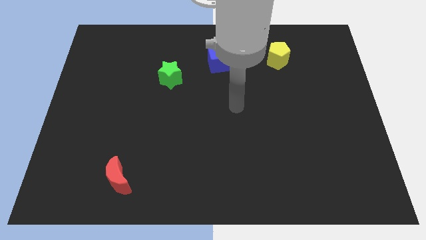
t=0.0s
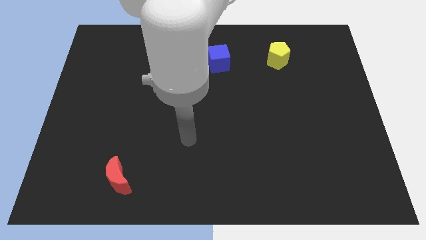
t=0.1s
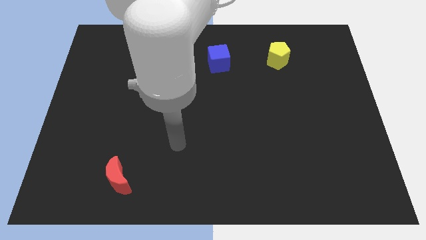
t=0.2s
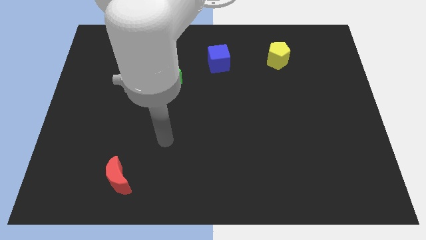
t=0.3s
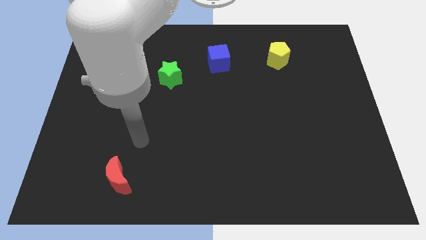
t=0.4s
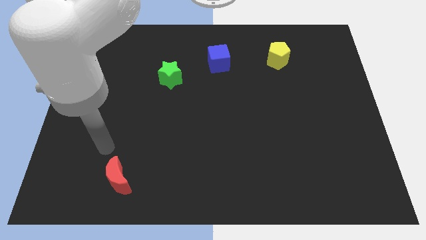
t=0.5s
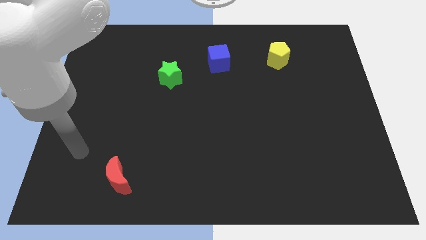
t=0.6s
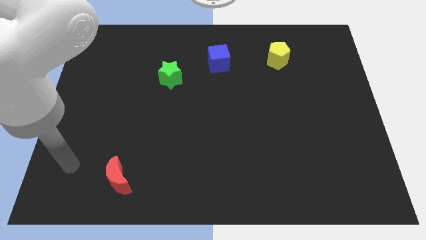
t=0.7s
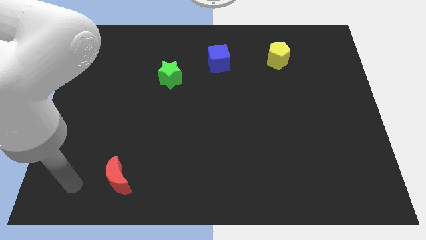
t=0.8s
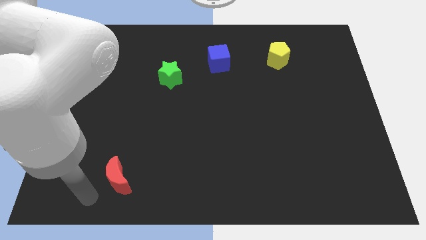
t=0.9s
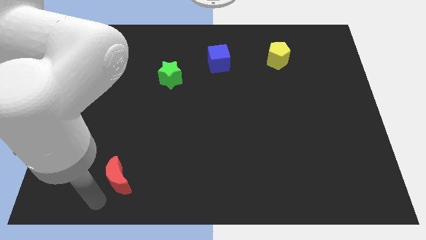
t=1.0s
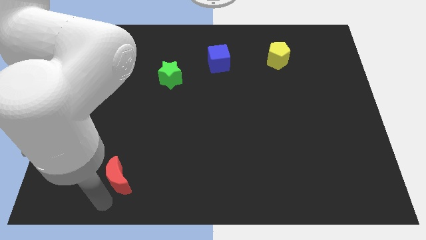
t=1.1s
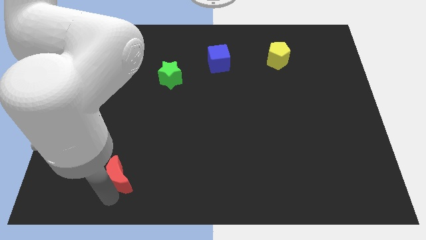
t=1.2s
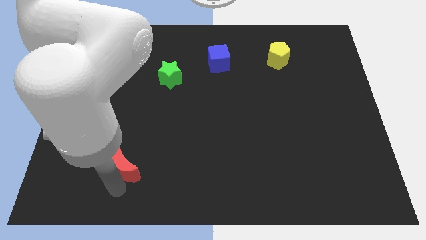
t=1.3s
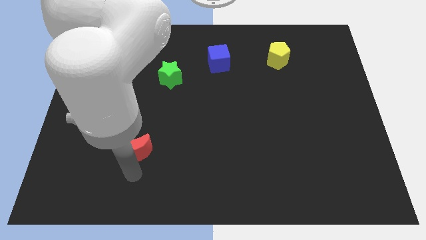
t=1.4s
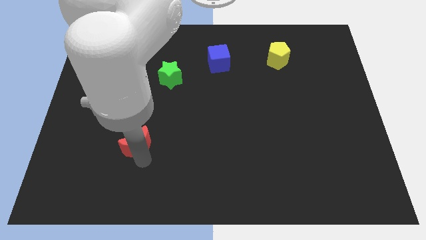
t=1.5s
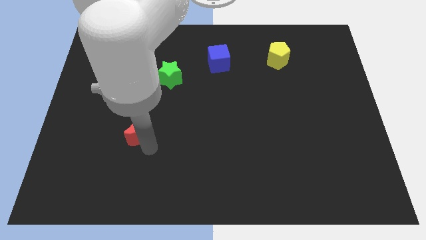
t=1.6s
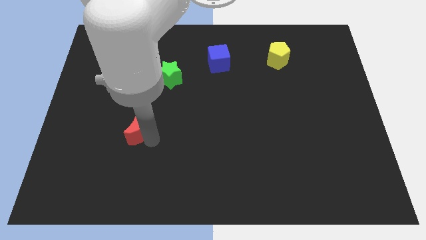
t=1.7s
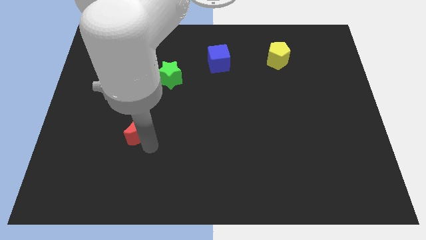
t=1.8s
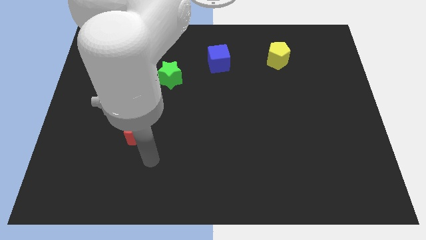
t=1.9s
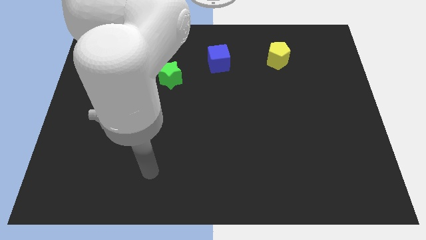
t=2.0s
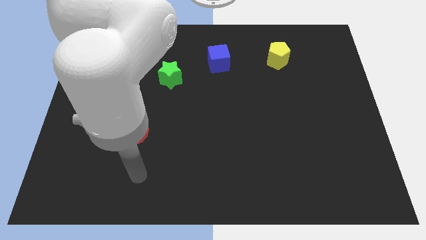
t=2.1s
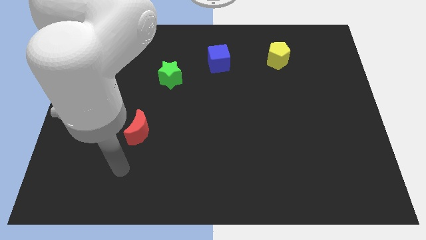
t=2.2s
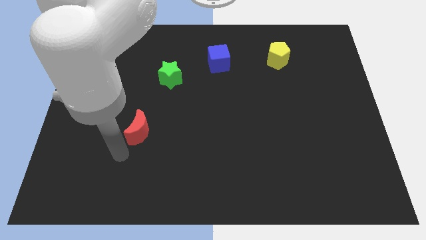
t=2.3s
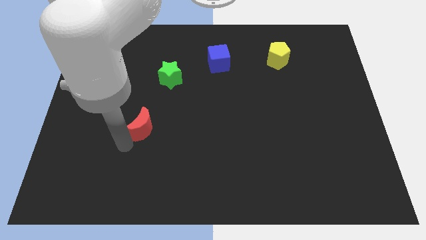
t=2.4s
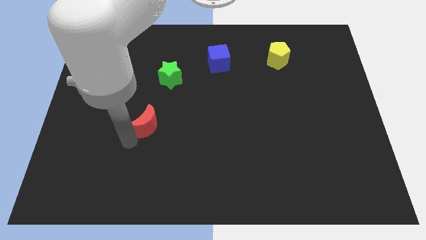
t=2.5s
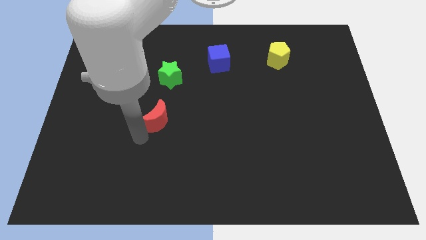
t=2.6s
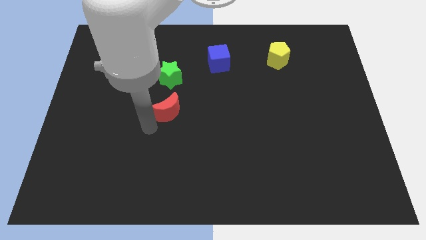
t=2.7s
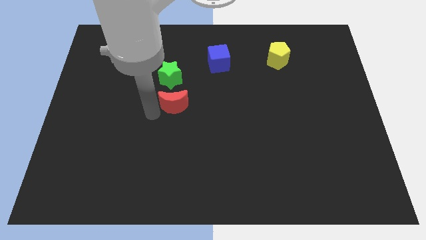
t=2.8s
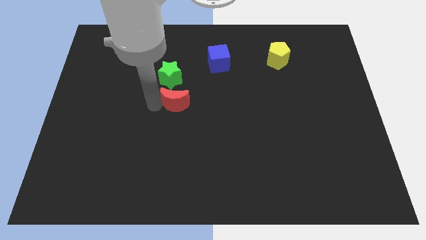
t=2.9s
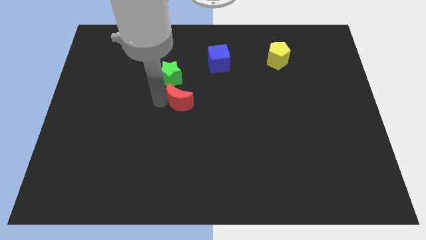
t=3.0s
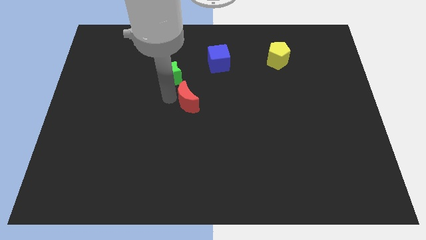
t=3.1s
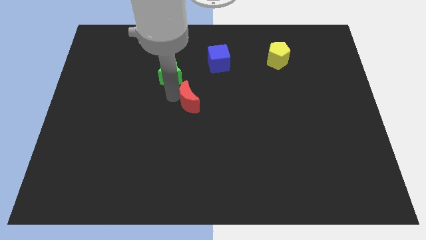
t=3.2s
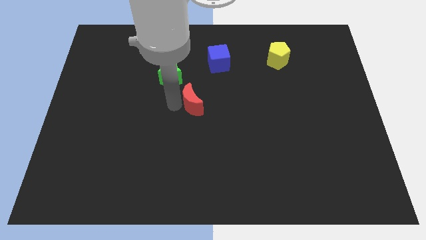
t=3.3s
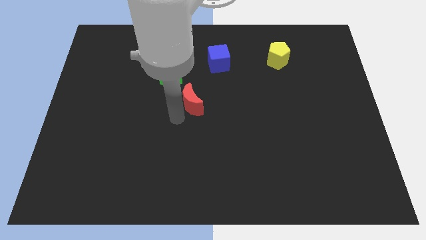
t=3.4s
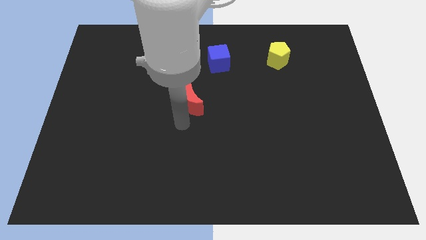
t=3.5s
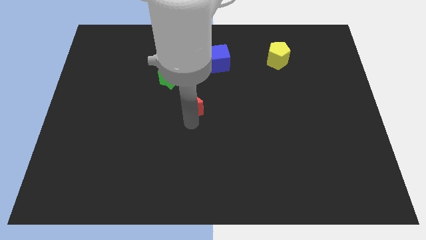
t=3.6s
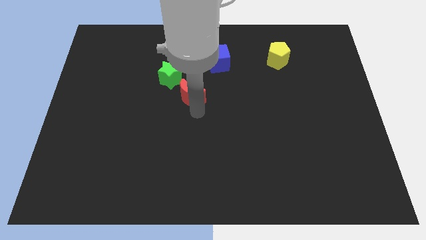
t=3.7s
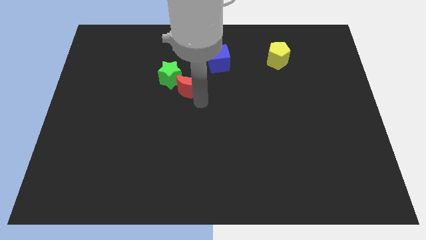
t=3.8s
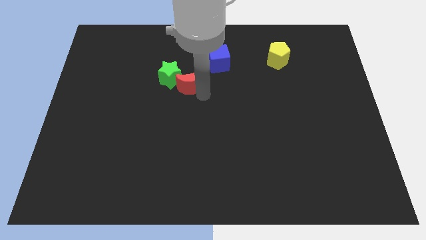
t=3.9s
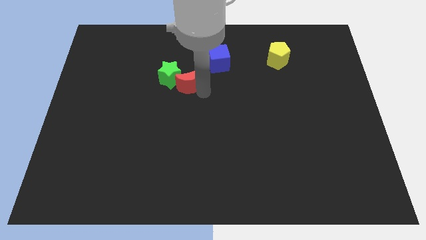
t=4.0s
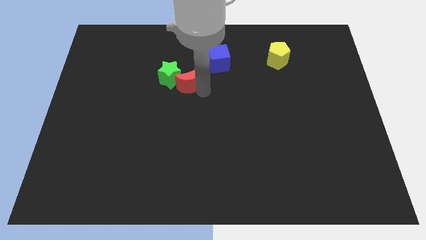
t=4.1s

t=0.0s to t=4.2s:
move the red block towards the star

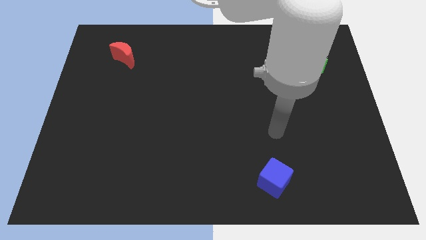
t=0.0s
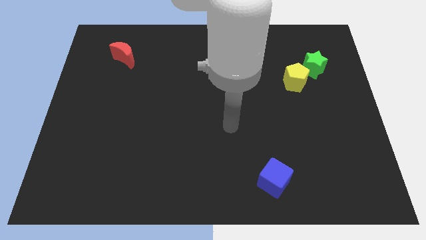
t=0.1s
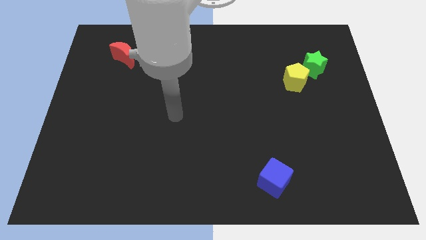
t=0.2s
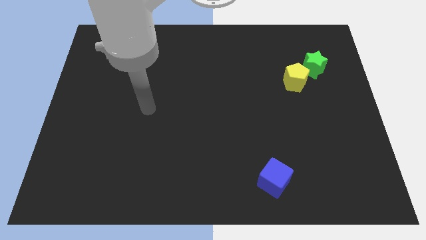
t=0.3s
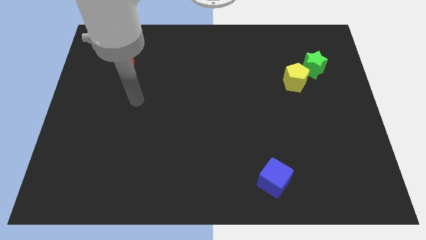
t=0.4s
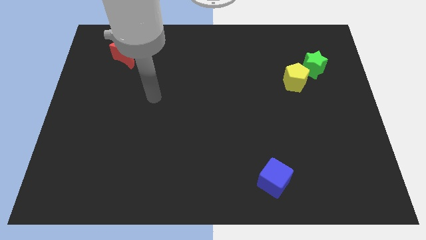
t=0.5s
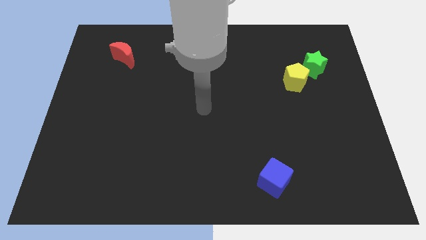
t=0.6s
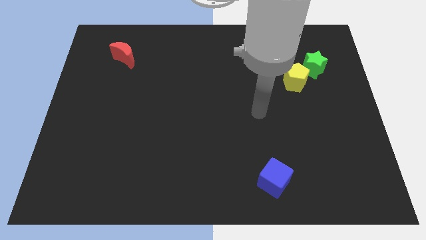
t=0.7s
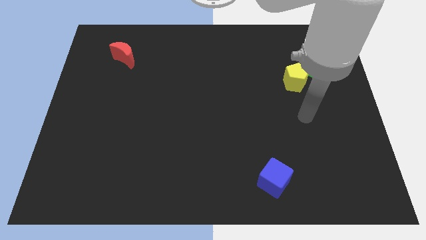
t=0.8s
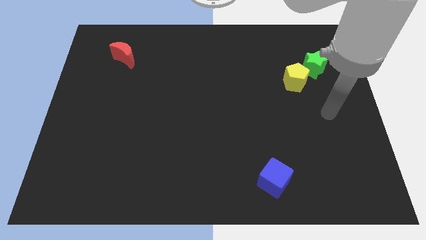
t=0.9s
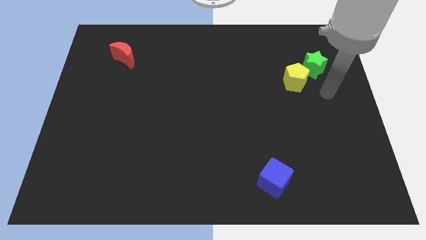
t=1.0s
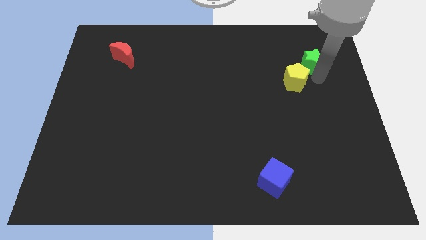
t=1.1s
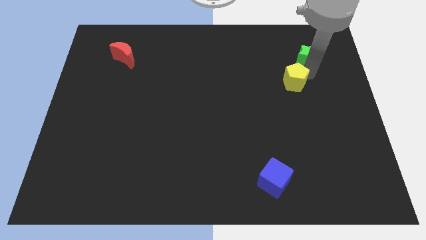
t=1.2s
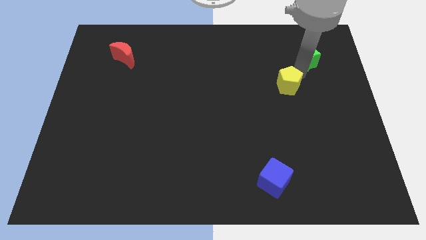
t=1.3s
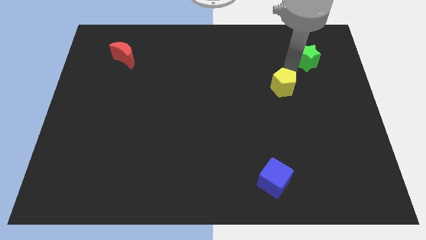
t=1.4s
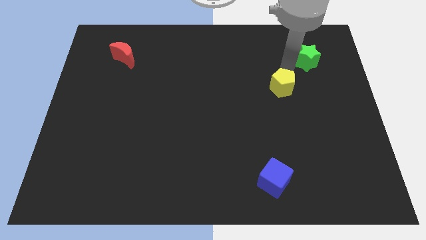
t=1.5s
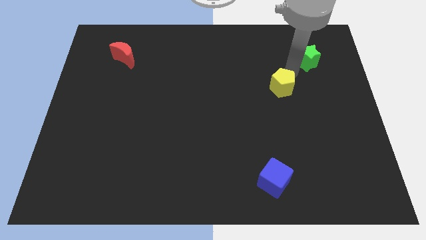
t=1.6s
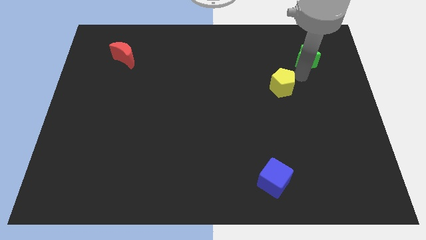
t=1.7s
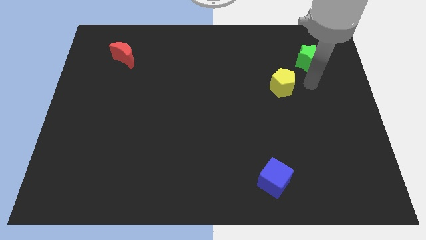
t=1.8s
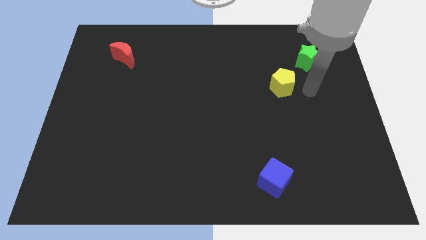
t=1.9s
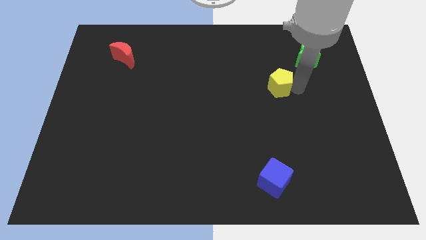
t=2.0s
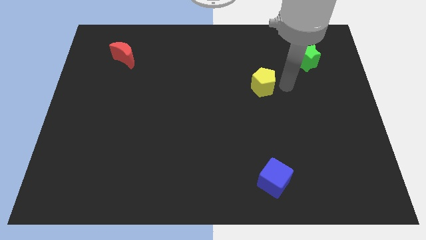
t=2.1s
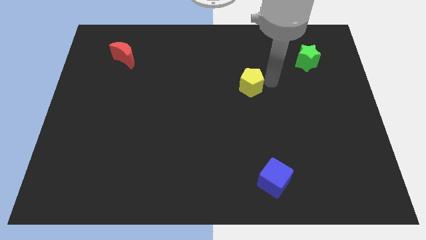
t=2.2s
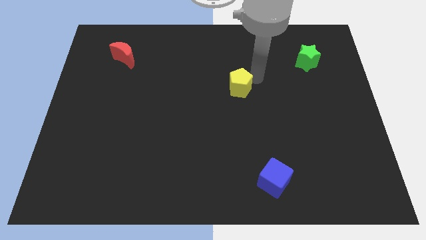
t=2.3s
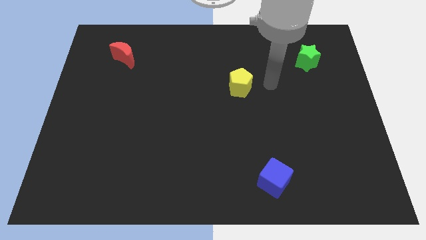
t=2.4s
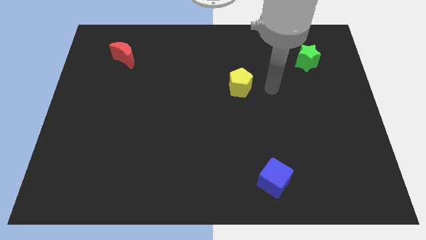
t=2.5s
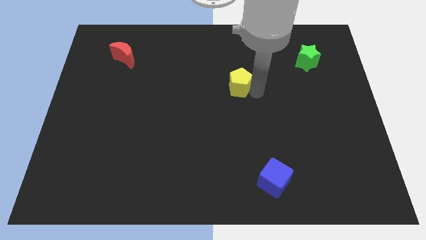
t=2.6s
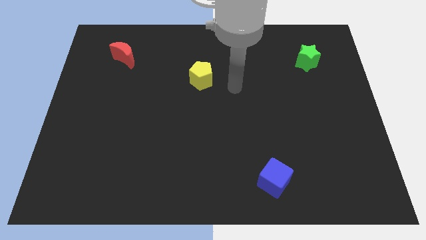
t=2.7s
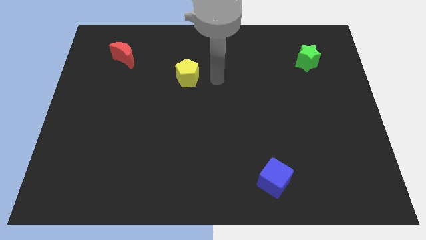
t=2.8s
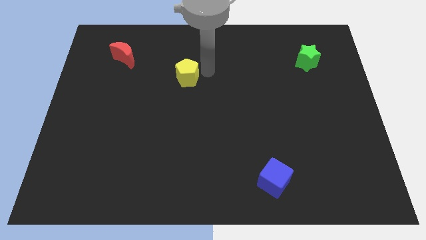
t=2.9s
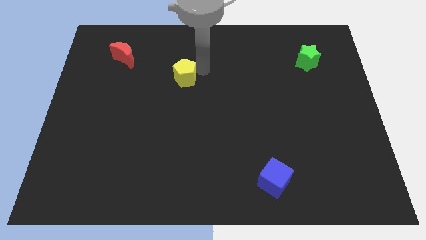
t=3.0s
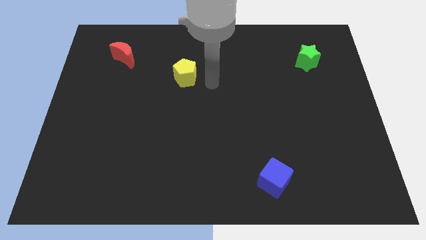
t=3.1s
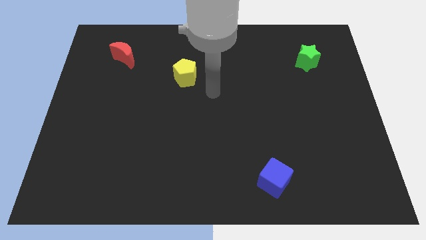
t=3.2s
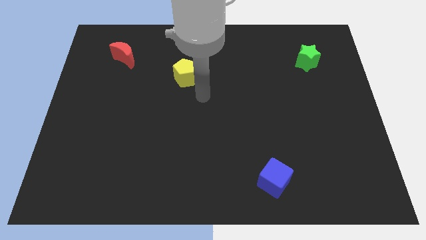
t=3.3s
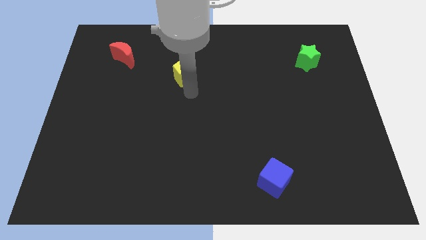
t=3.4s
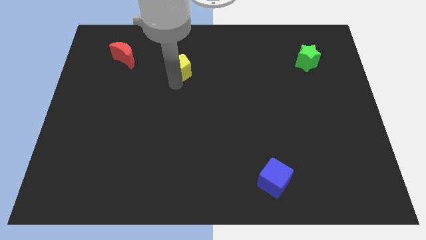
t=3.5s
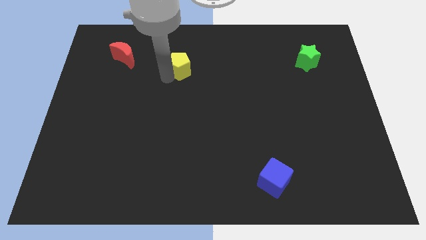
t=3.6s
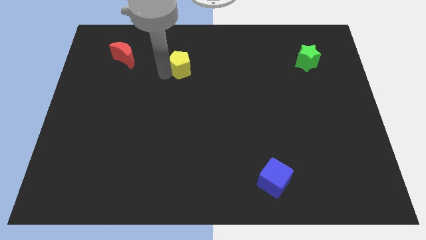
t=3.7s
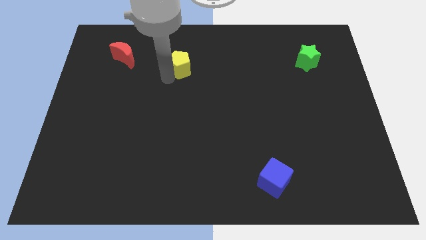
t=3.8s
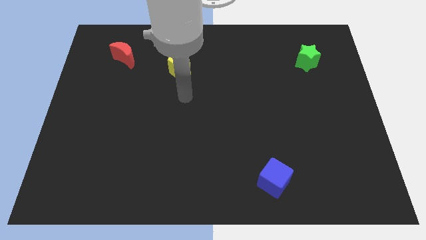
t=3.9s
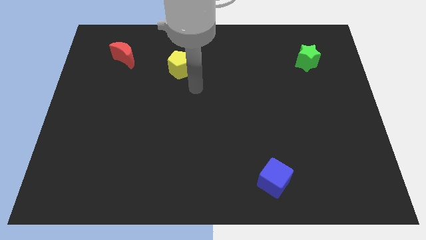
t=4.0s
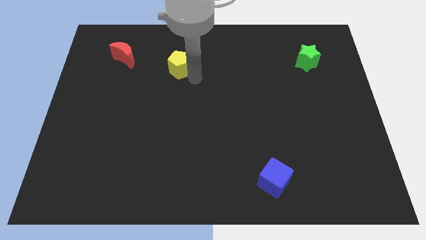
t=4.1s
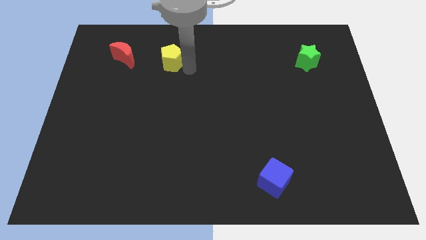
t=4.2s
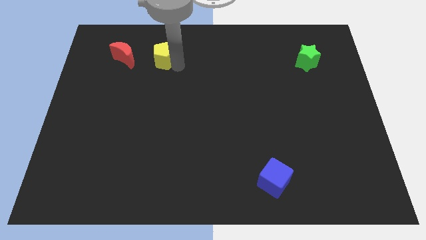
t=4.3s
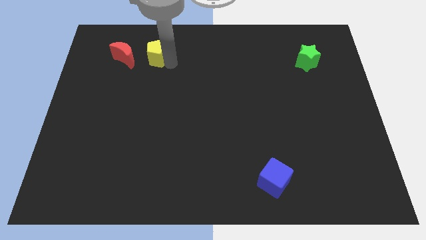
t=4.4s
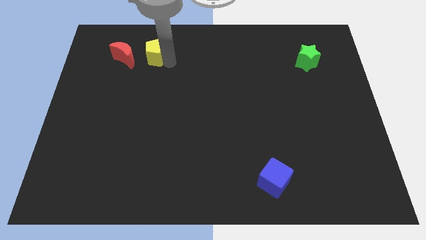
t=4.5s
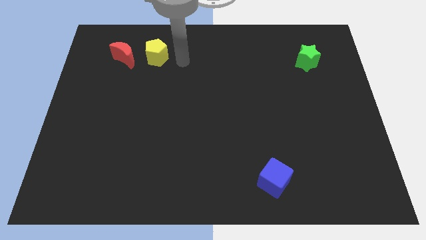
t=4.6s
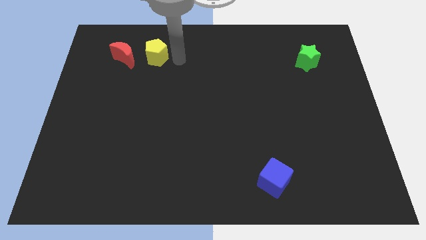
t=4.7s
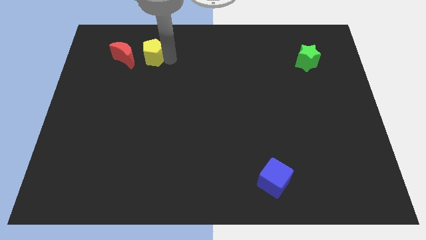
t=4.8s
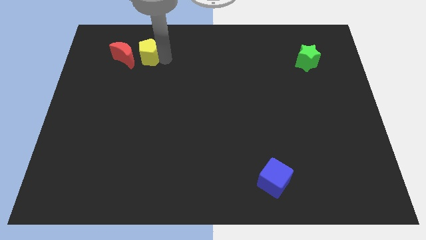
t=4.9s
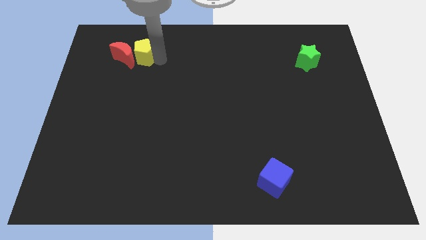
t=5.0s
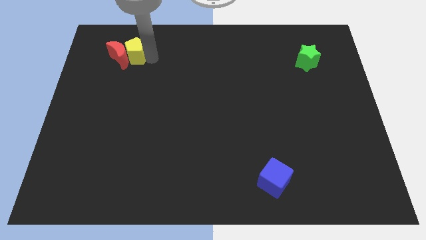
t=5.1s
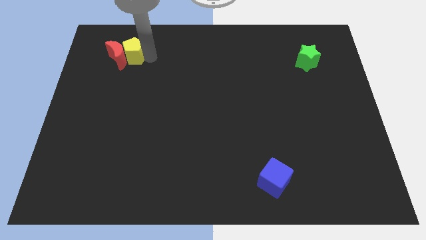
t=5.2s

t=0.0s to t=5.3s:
move the pentagon next to the red moon
